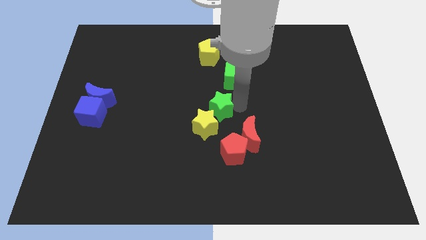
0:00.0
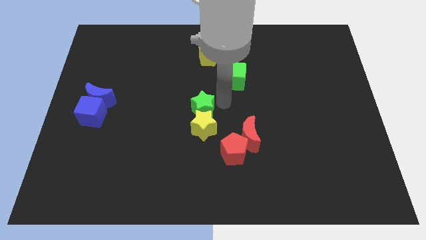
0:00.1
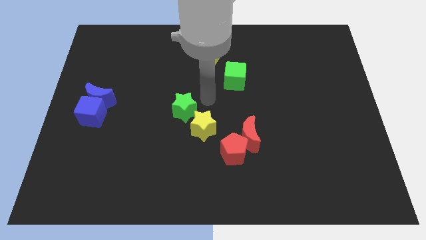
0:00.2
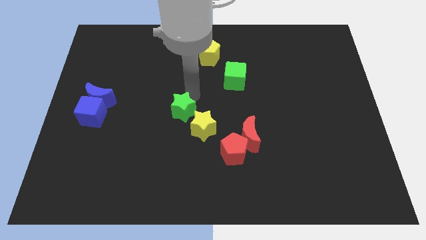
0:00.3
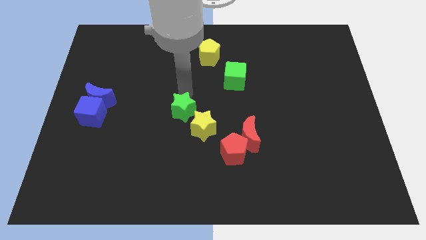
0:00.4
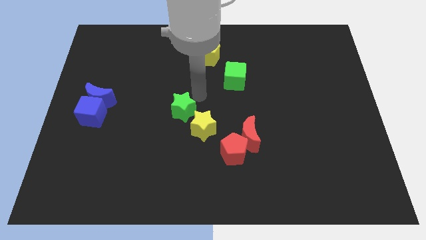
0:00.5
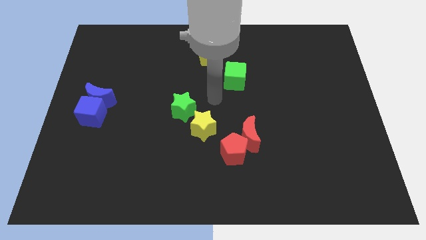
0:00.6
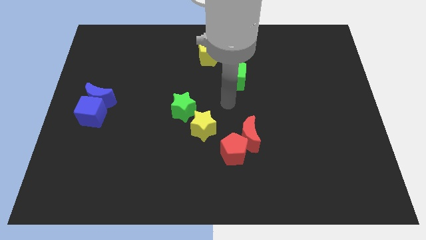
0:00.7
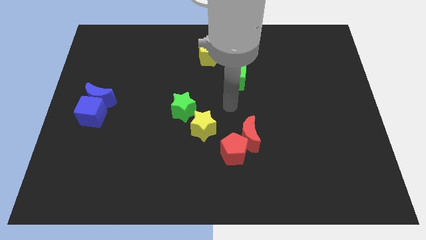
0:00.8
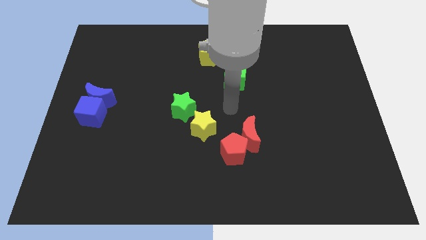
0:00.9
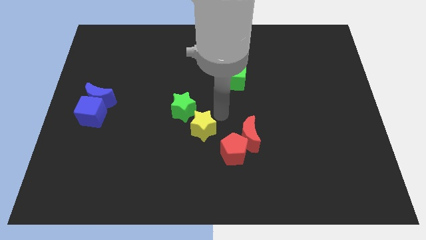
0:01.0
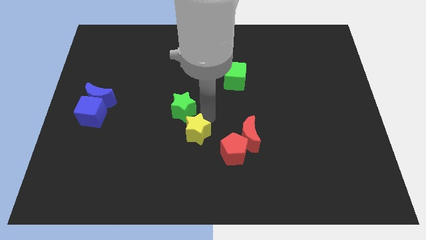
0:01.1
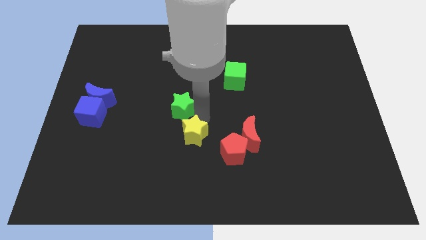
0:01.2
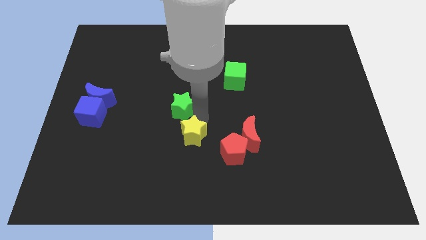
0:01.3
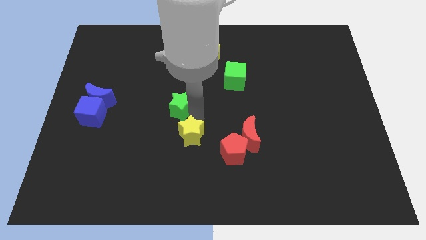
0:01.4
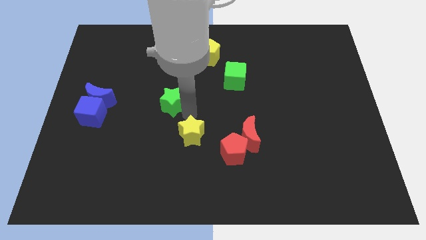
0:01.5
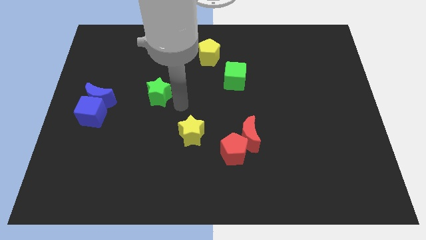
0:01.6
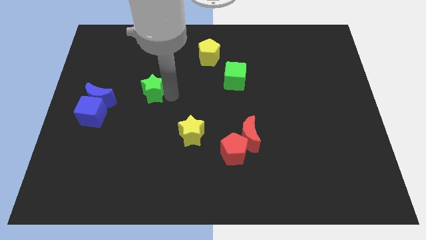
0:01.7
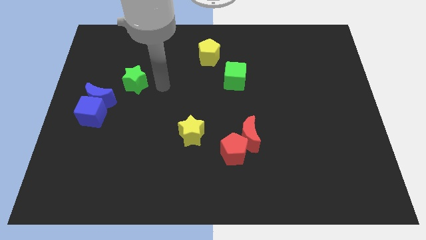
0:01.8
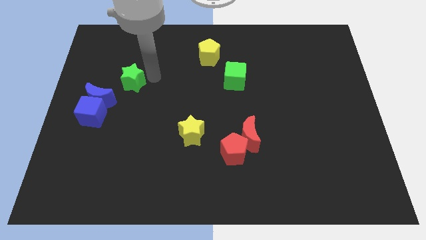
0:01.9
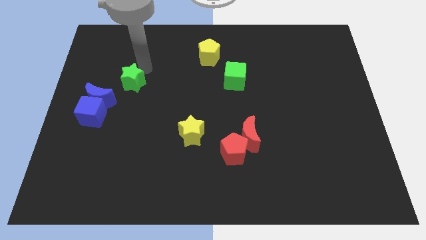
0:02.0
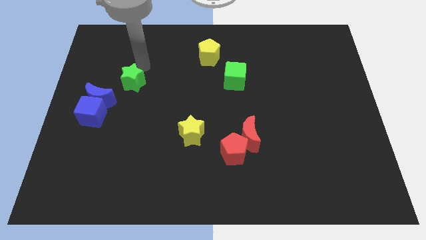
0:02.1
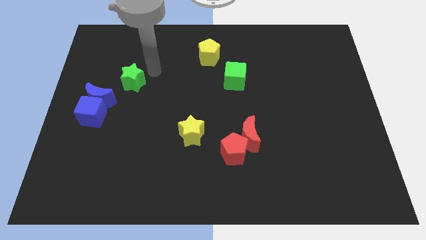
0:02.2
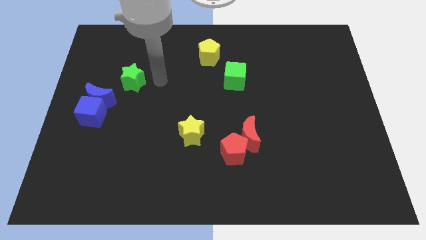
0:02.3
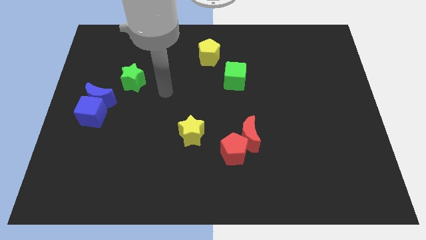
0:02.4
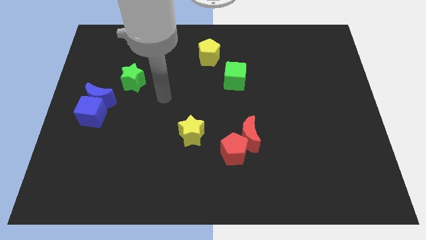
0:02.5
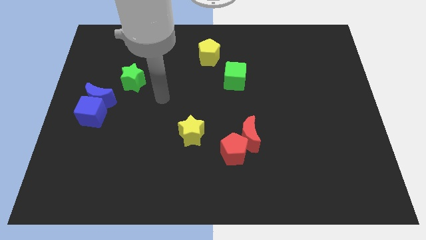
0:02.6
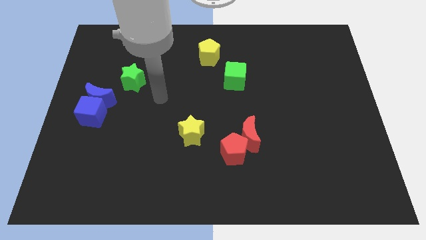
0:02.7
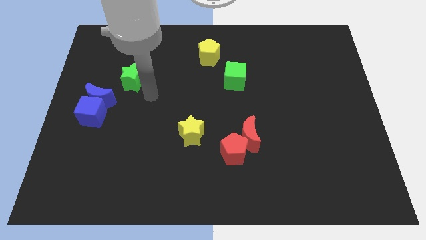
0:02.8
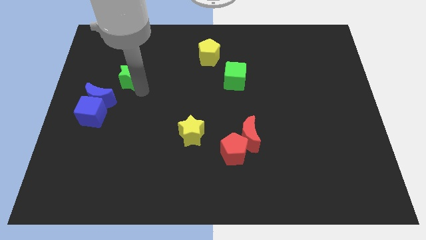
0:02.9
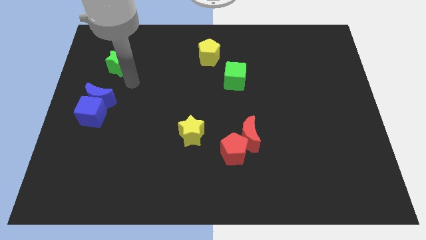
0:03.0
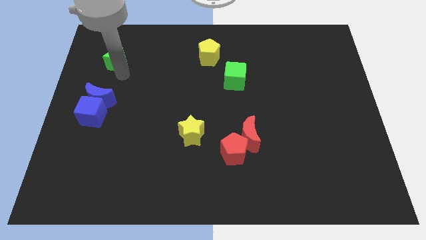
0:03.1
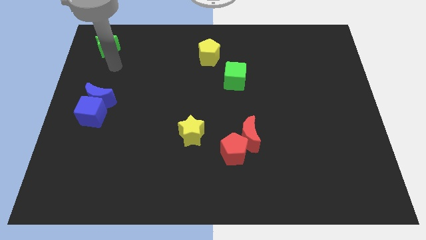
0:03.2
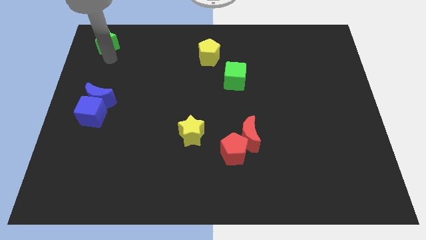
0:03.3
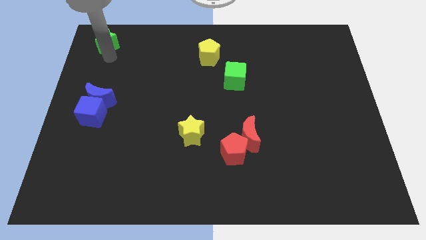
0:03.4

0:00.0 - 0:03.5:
separate green star from the yellow star

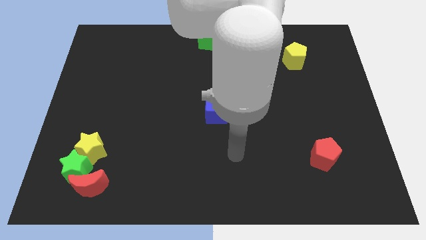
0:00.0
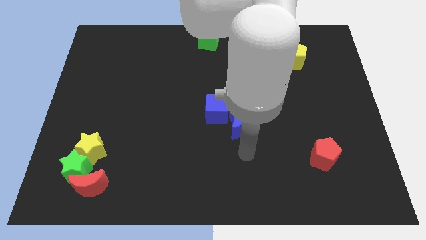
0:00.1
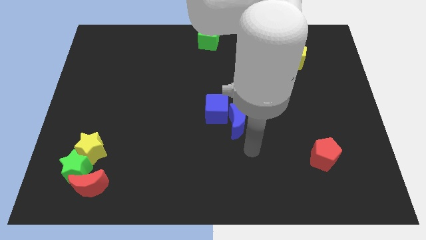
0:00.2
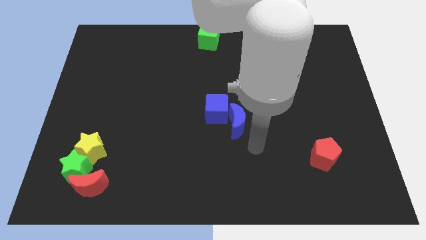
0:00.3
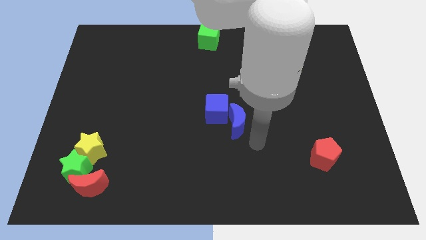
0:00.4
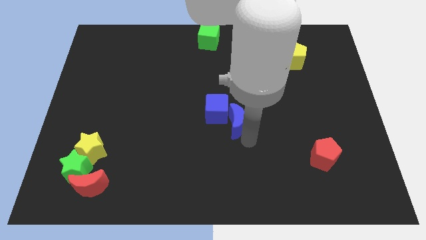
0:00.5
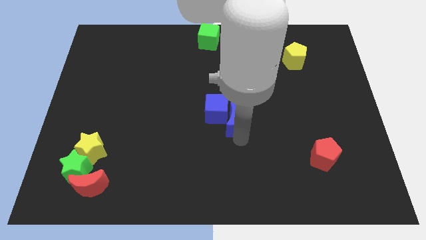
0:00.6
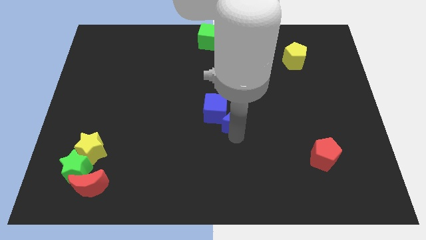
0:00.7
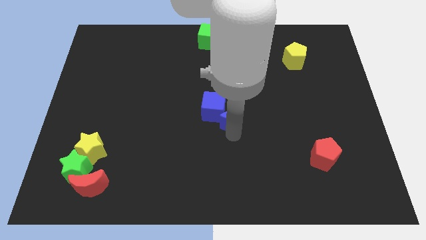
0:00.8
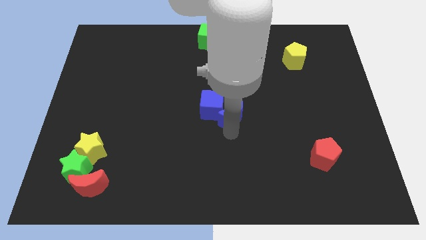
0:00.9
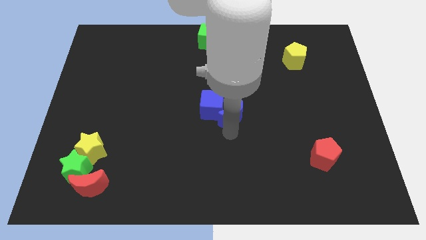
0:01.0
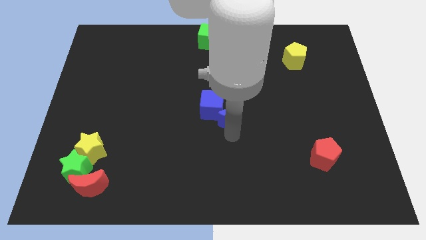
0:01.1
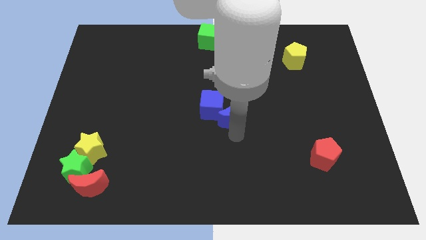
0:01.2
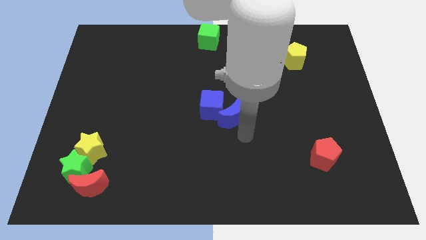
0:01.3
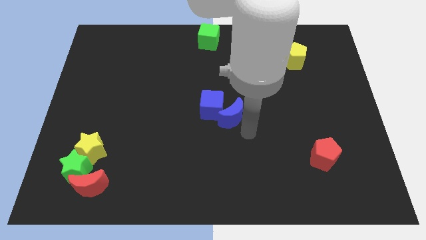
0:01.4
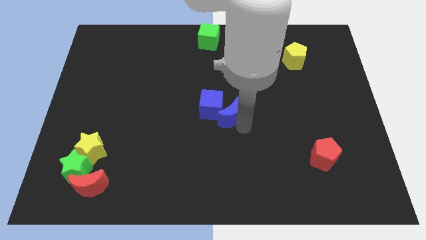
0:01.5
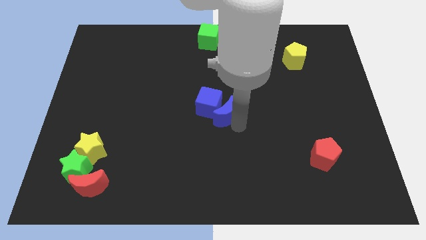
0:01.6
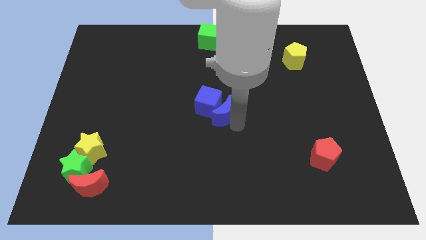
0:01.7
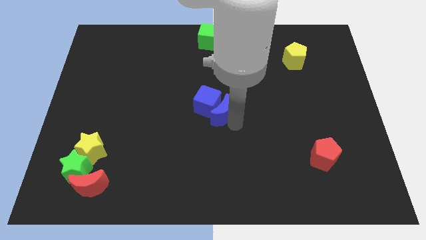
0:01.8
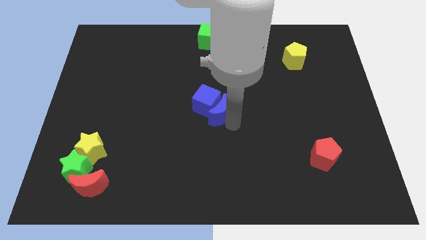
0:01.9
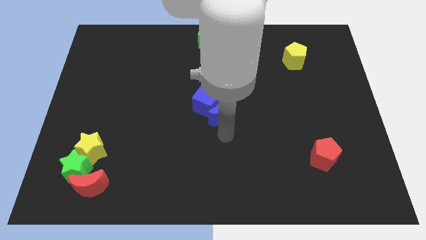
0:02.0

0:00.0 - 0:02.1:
adjust the blue cube and blue moon to the center

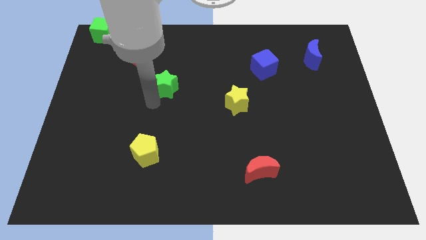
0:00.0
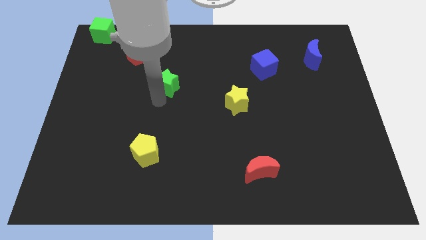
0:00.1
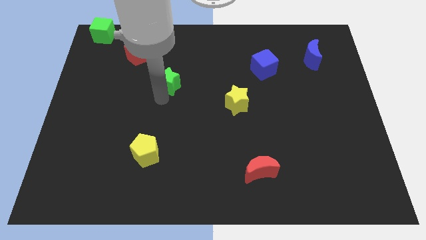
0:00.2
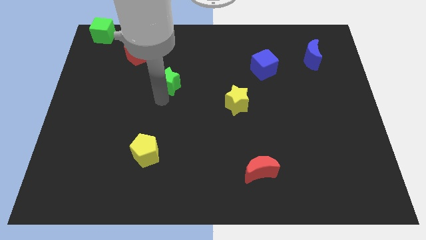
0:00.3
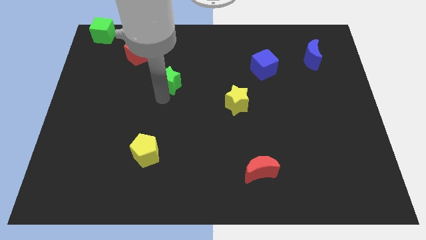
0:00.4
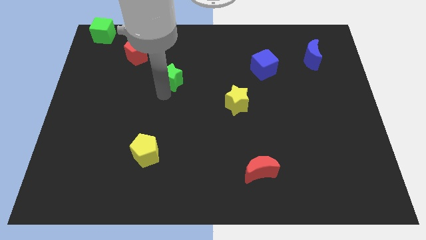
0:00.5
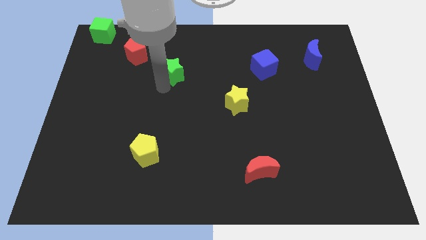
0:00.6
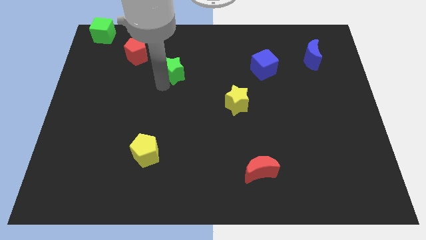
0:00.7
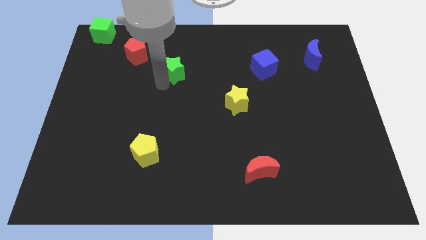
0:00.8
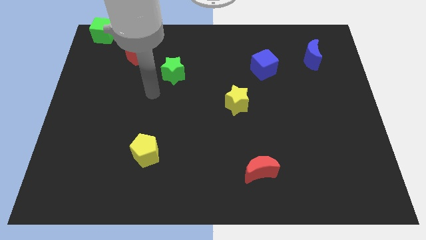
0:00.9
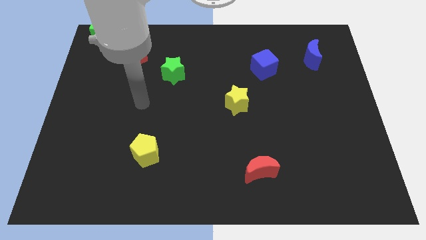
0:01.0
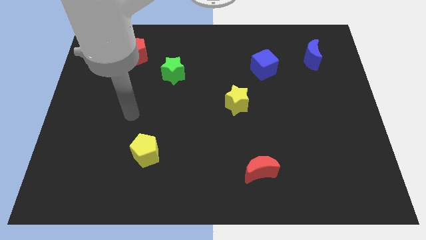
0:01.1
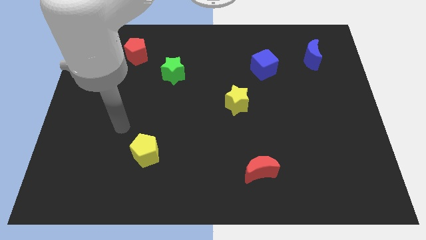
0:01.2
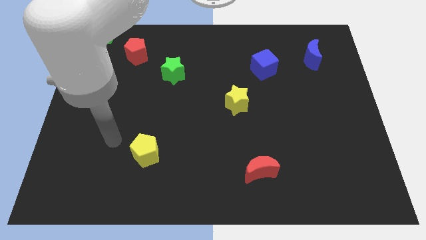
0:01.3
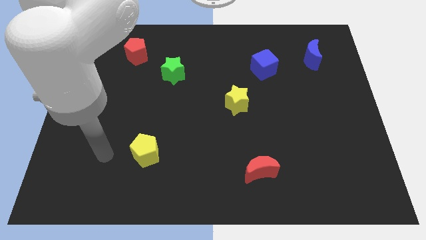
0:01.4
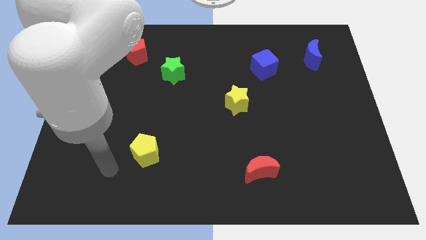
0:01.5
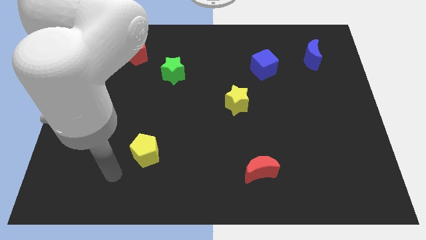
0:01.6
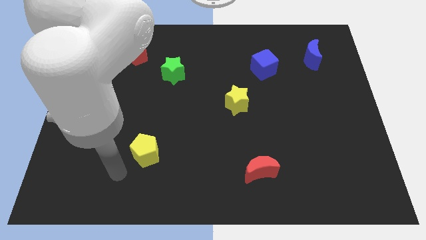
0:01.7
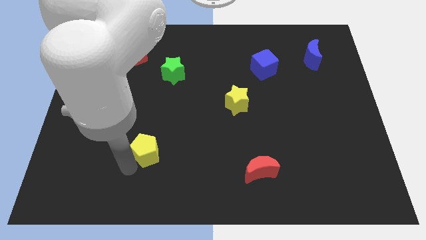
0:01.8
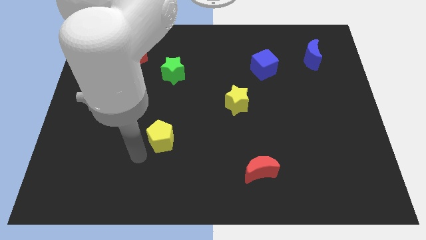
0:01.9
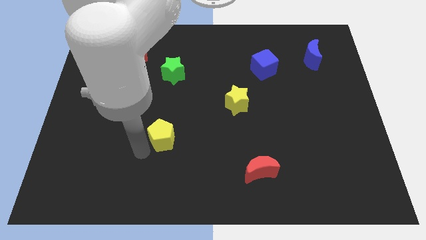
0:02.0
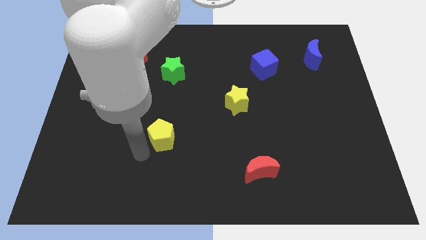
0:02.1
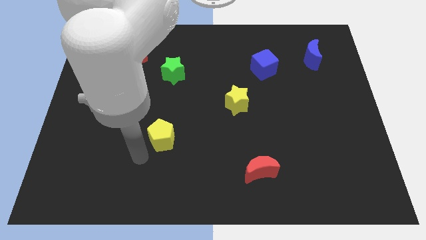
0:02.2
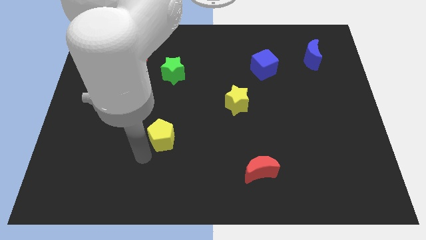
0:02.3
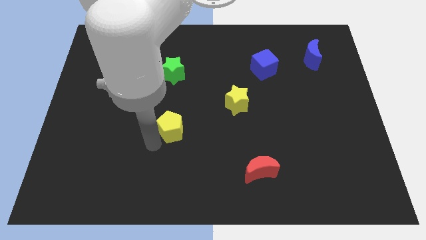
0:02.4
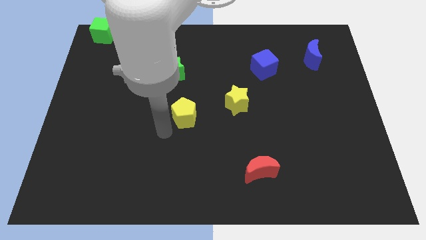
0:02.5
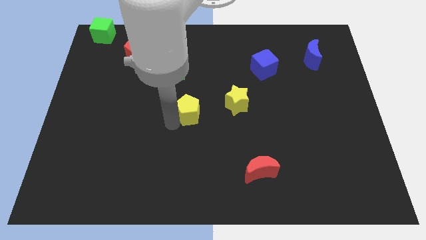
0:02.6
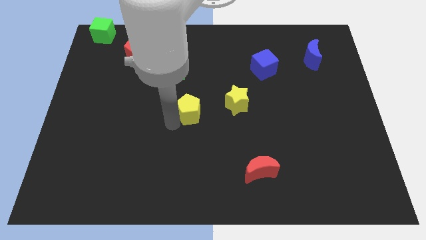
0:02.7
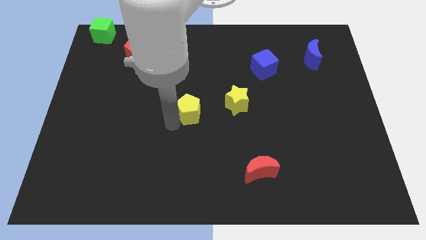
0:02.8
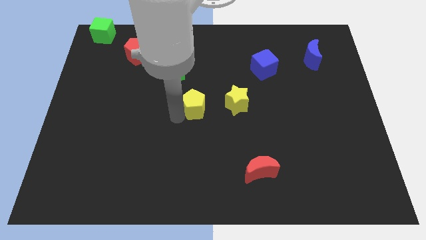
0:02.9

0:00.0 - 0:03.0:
move yellow pentagon towards yellow star

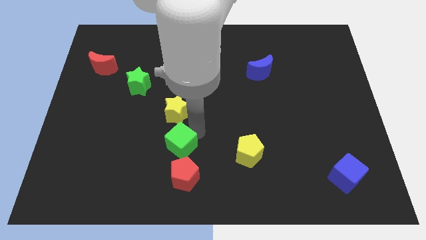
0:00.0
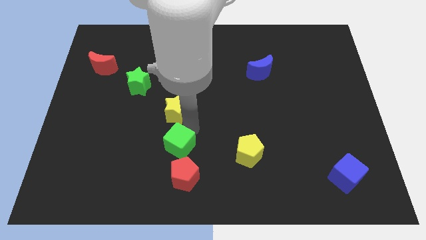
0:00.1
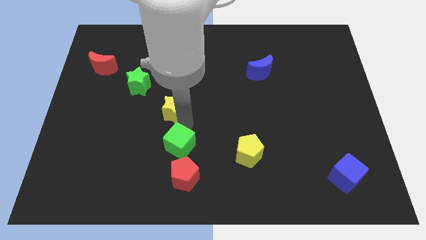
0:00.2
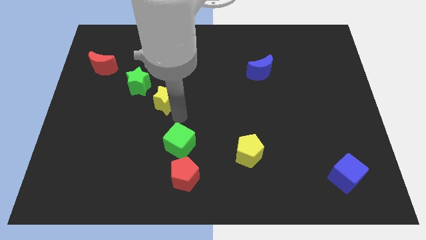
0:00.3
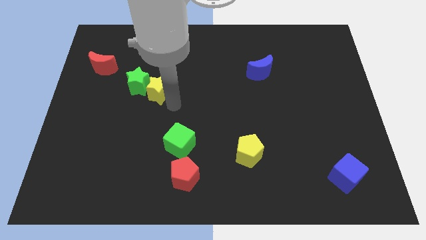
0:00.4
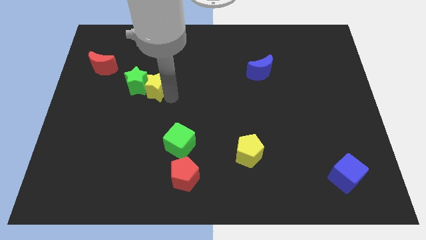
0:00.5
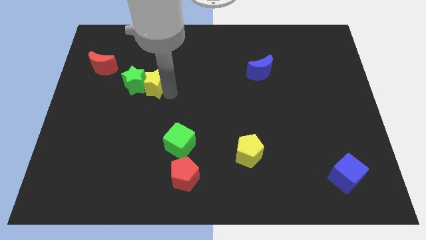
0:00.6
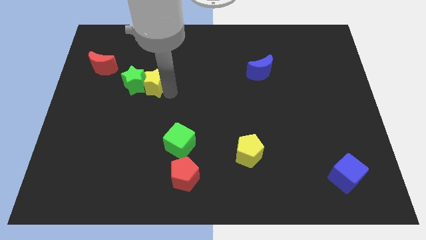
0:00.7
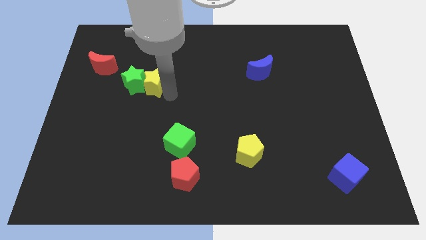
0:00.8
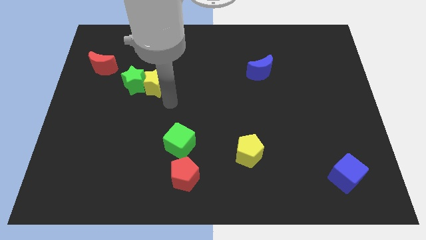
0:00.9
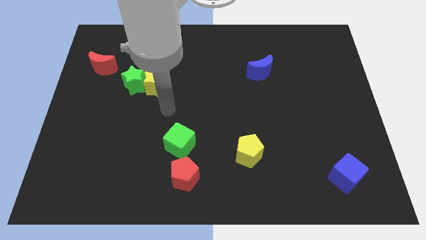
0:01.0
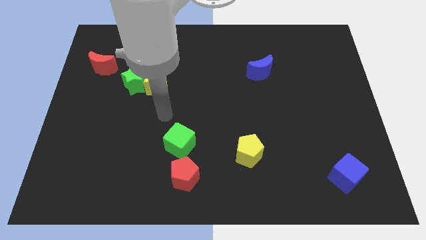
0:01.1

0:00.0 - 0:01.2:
put the yellow star parallel right to the green star
